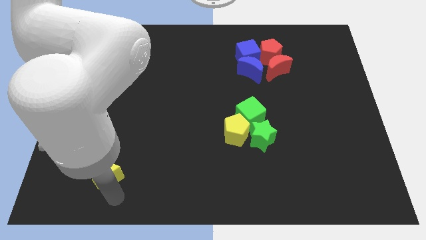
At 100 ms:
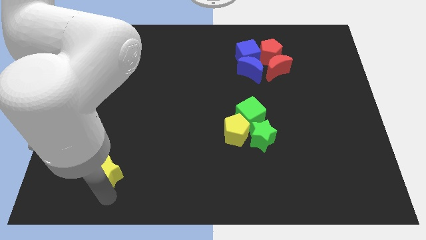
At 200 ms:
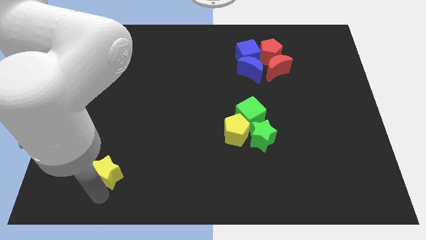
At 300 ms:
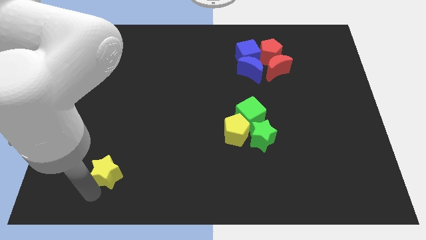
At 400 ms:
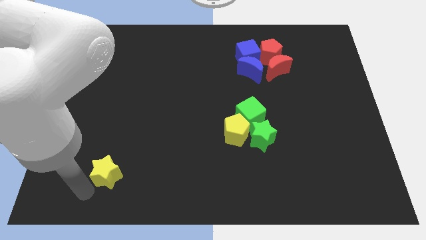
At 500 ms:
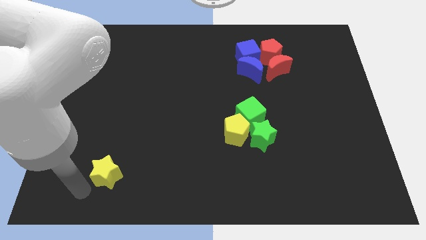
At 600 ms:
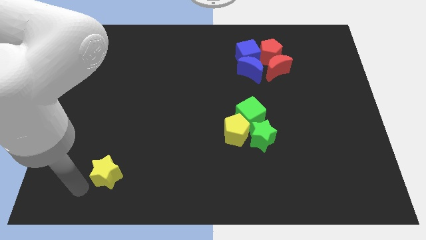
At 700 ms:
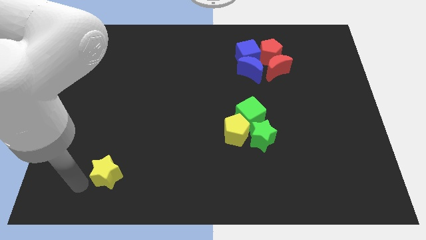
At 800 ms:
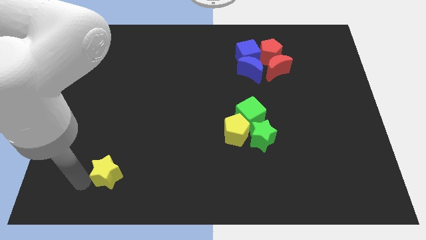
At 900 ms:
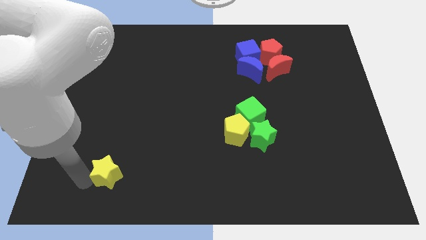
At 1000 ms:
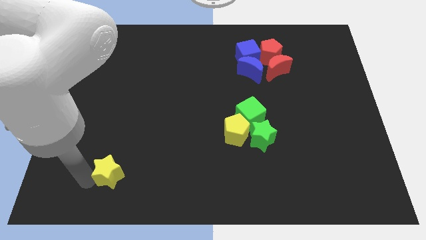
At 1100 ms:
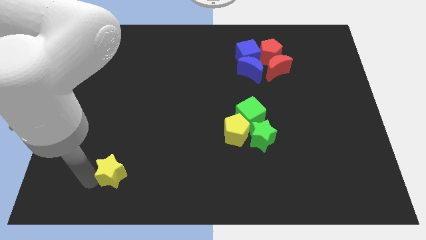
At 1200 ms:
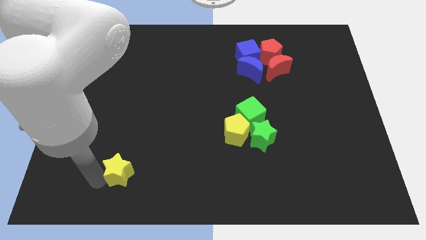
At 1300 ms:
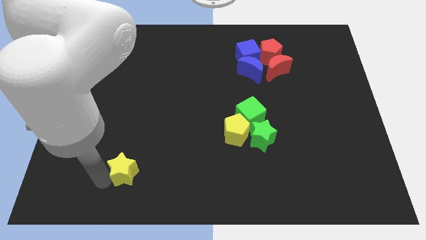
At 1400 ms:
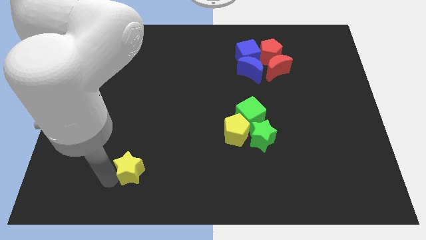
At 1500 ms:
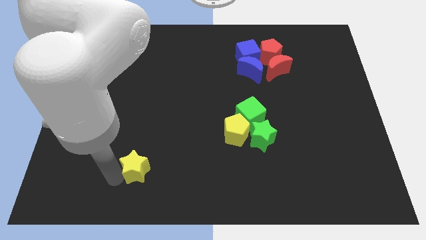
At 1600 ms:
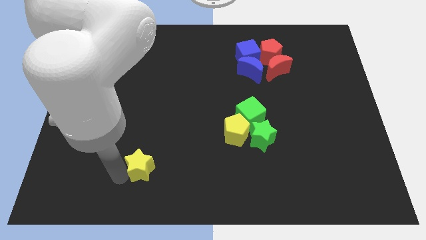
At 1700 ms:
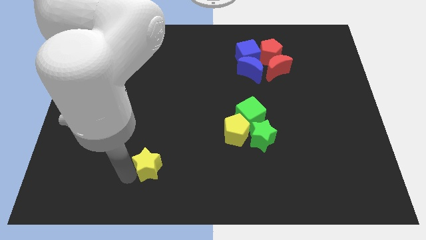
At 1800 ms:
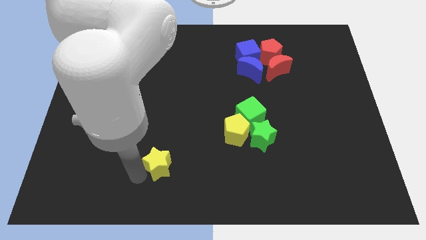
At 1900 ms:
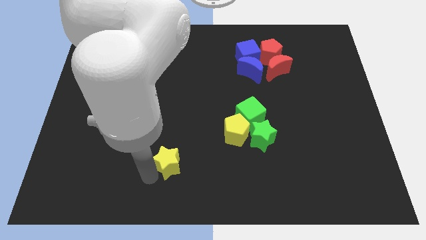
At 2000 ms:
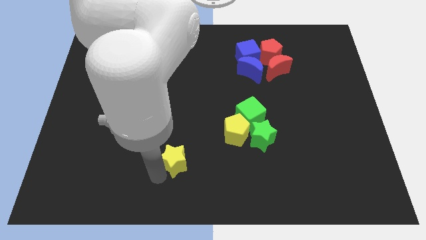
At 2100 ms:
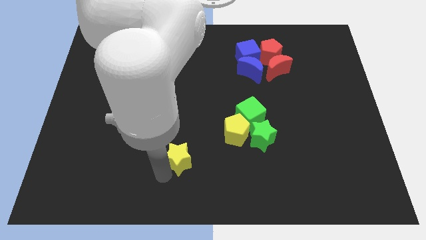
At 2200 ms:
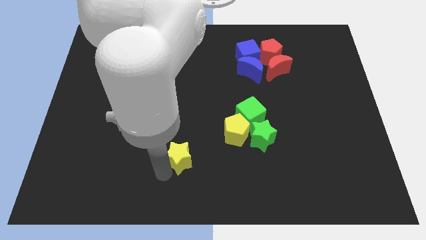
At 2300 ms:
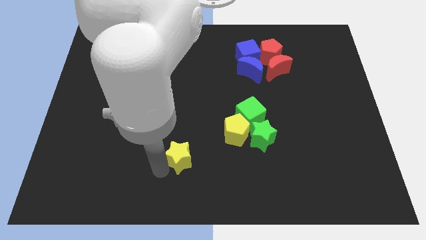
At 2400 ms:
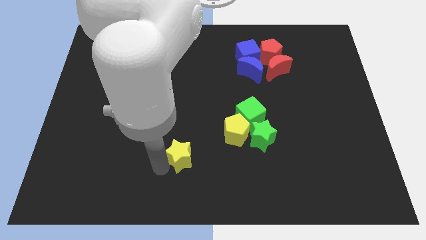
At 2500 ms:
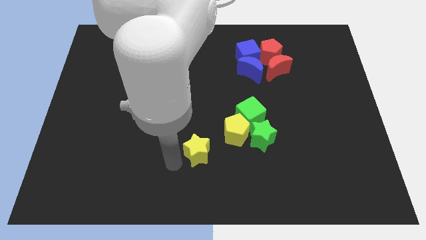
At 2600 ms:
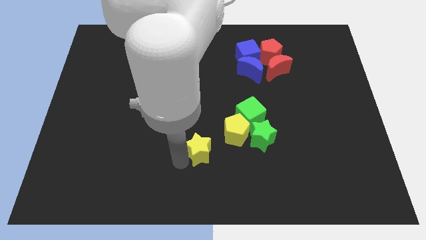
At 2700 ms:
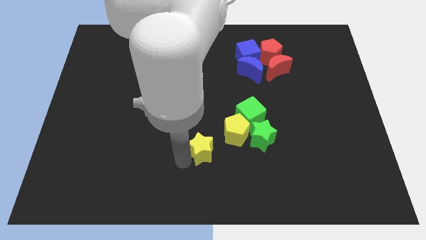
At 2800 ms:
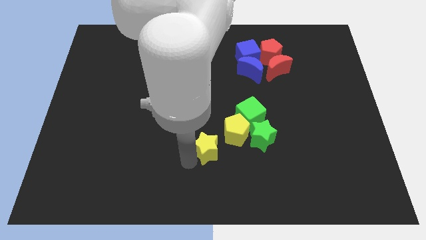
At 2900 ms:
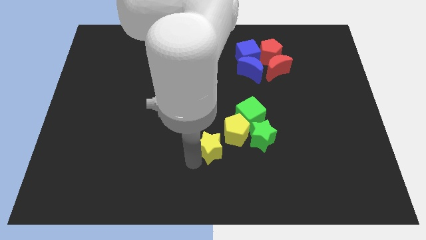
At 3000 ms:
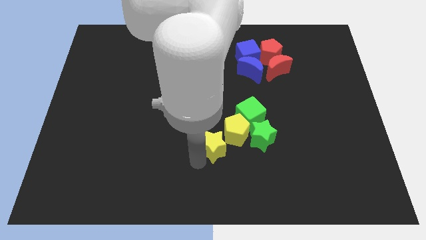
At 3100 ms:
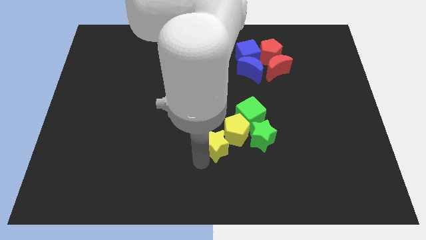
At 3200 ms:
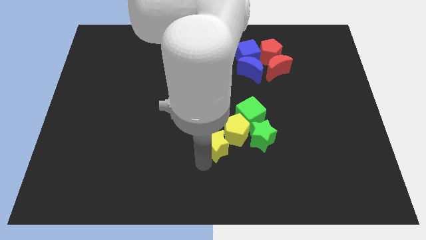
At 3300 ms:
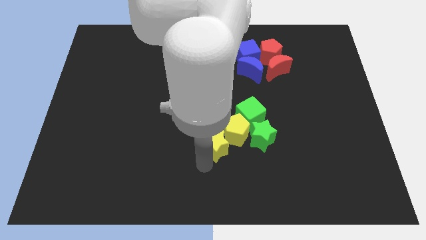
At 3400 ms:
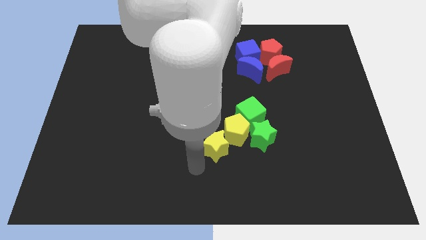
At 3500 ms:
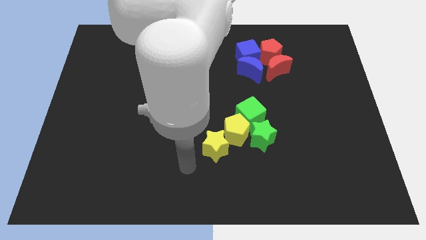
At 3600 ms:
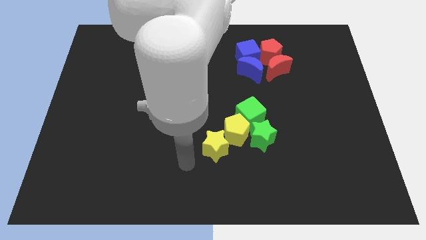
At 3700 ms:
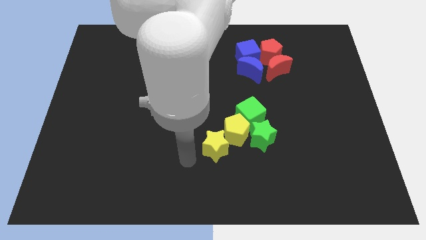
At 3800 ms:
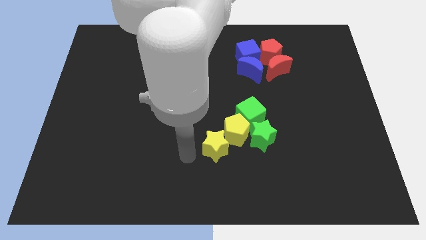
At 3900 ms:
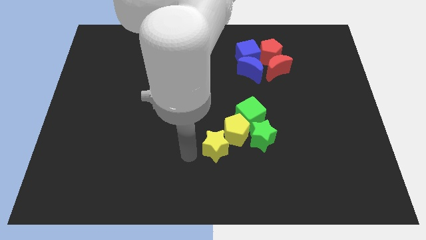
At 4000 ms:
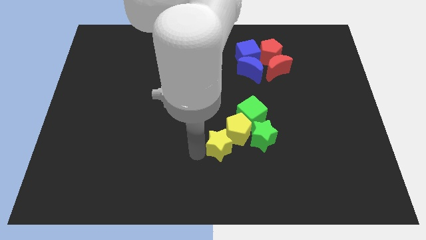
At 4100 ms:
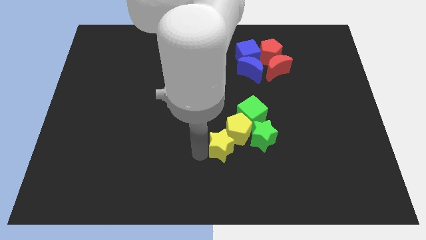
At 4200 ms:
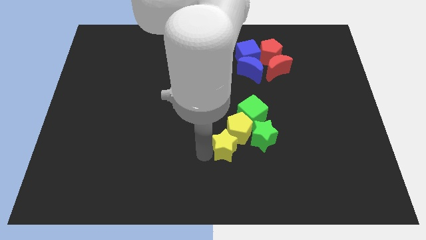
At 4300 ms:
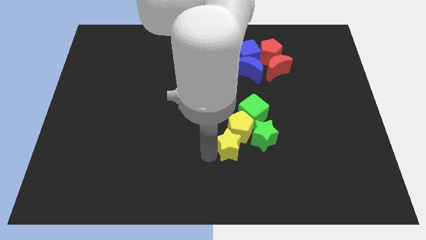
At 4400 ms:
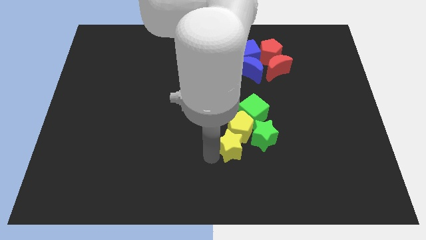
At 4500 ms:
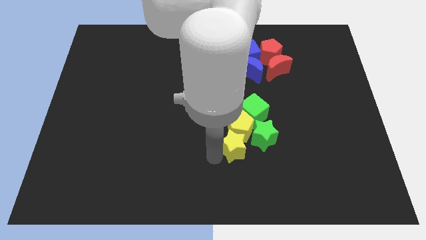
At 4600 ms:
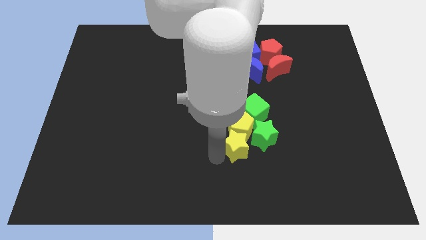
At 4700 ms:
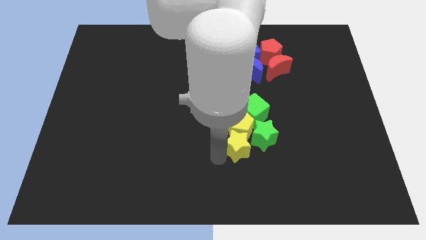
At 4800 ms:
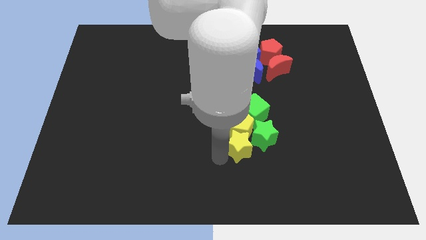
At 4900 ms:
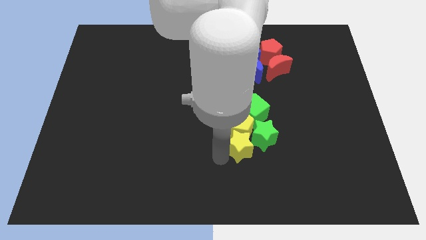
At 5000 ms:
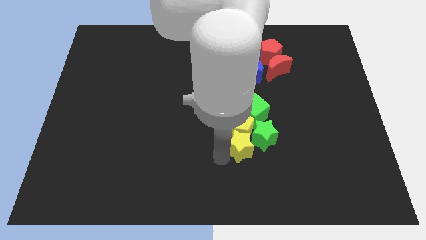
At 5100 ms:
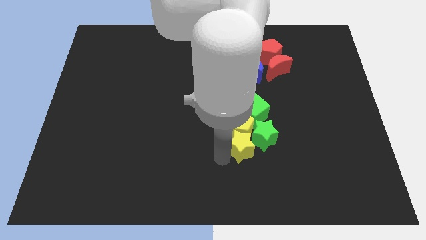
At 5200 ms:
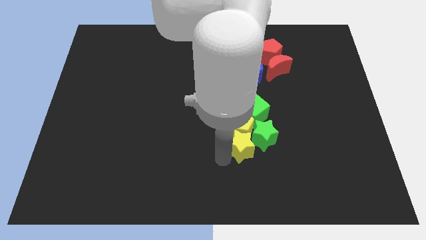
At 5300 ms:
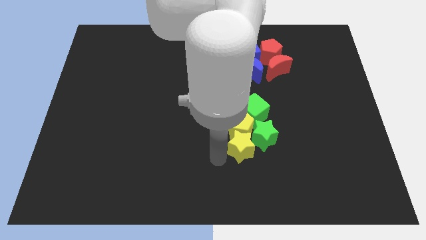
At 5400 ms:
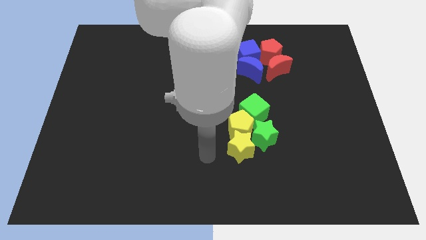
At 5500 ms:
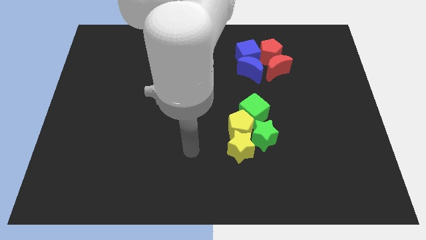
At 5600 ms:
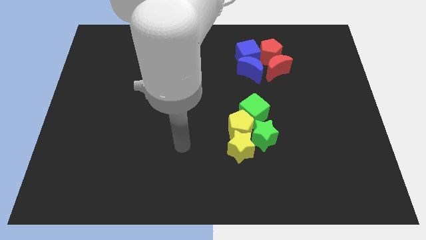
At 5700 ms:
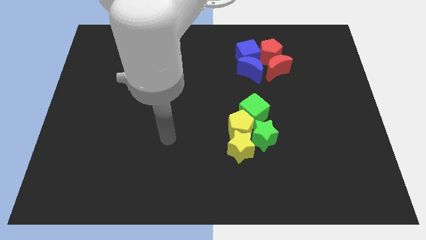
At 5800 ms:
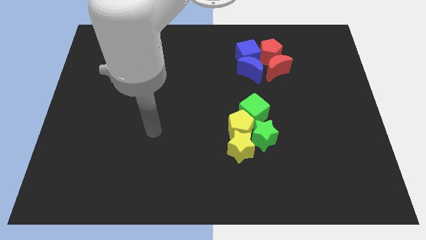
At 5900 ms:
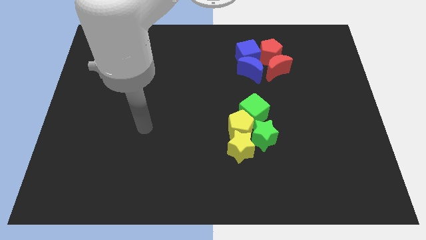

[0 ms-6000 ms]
push the yellow star to the bottom of the yellow pentagon

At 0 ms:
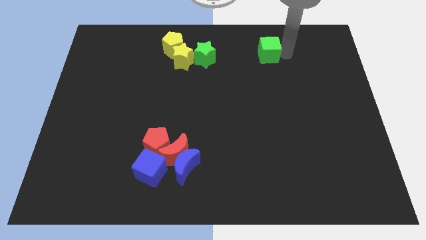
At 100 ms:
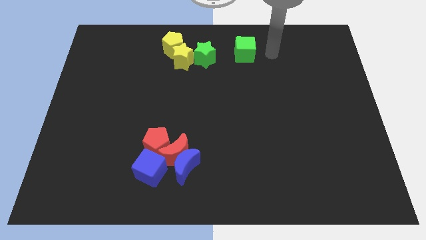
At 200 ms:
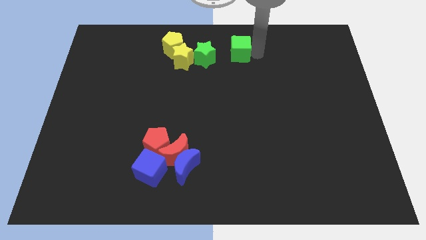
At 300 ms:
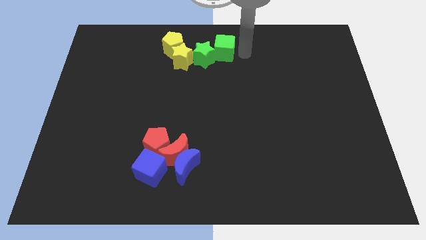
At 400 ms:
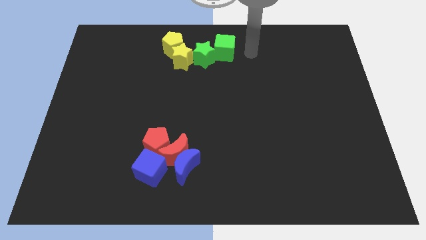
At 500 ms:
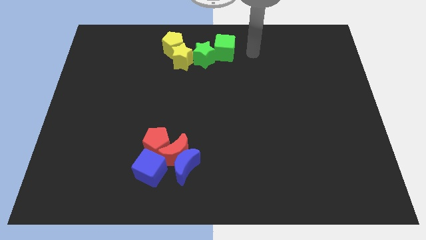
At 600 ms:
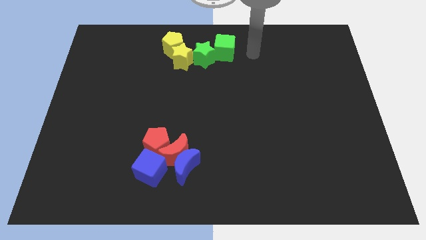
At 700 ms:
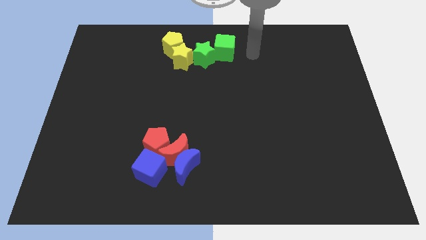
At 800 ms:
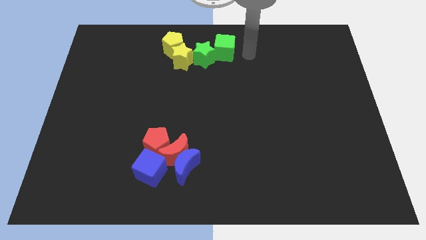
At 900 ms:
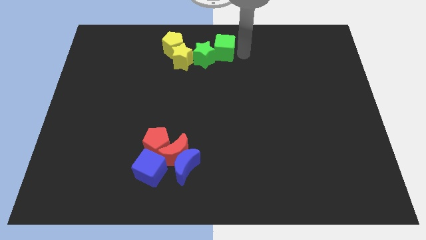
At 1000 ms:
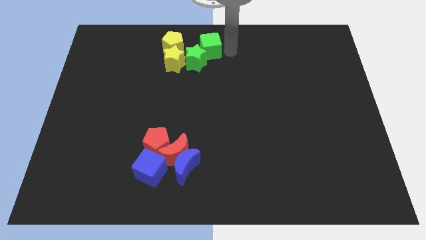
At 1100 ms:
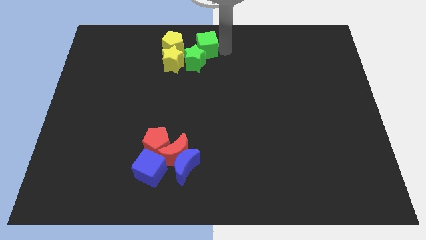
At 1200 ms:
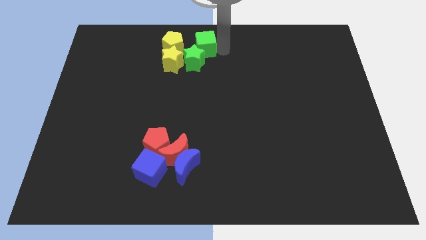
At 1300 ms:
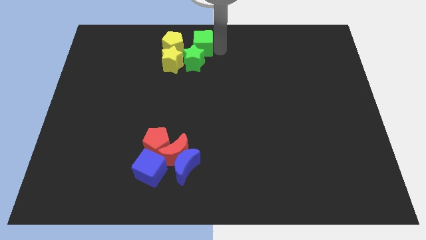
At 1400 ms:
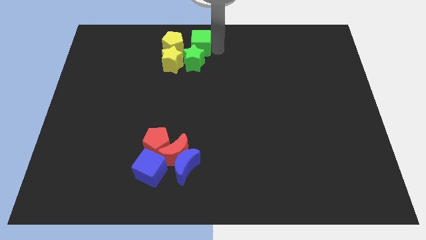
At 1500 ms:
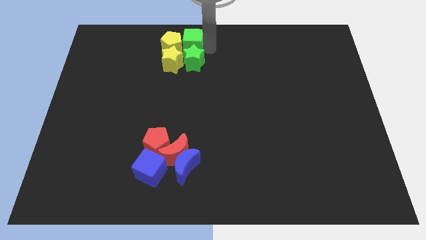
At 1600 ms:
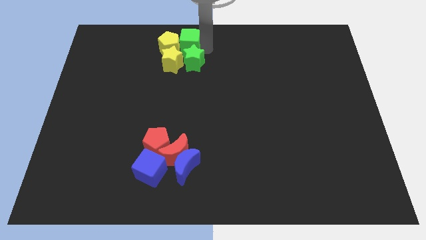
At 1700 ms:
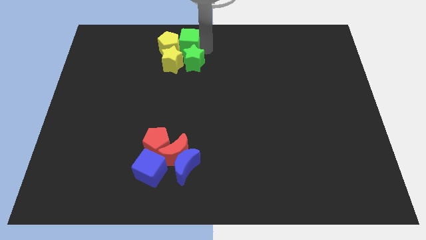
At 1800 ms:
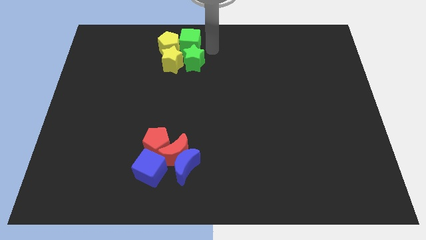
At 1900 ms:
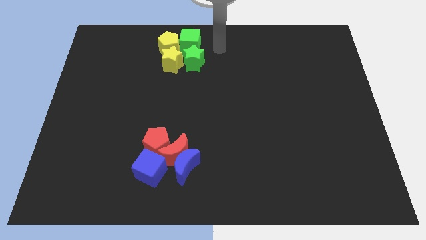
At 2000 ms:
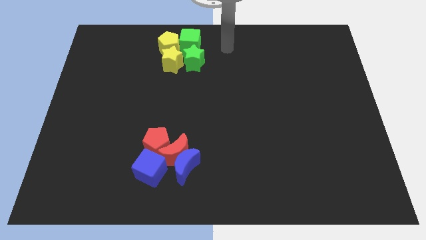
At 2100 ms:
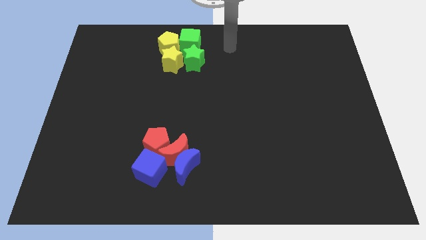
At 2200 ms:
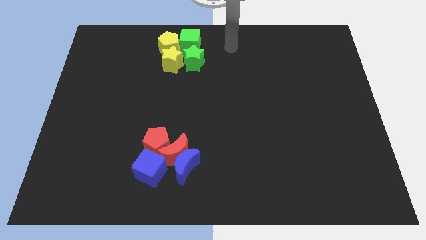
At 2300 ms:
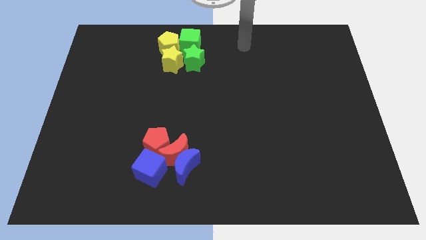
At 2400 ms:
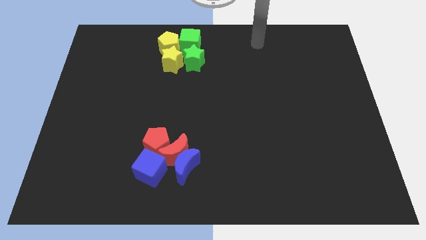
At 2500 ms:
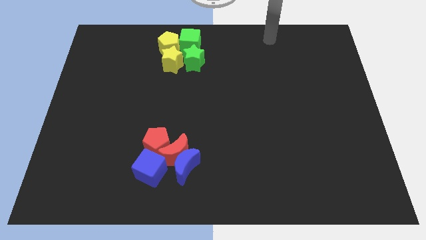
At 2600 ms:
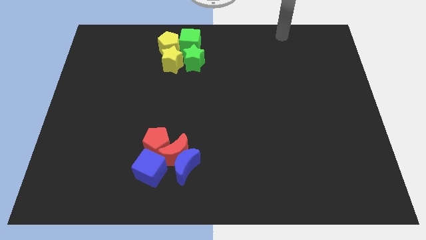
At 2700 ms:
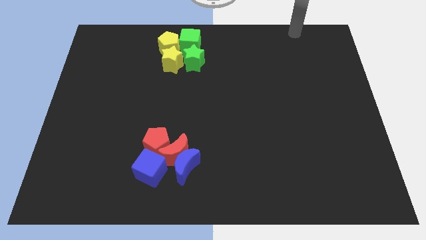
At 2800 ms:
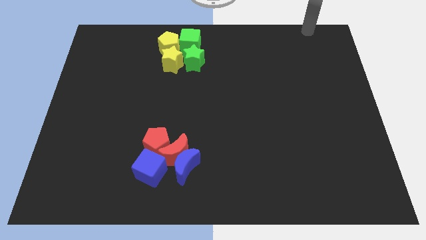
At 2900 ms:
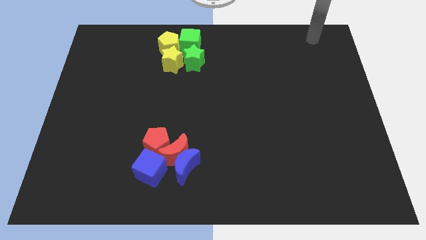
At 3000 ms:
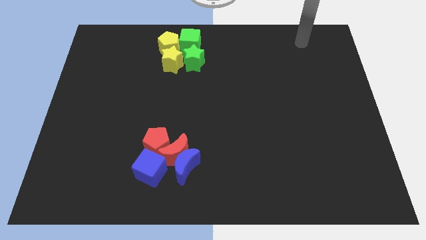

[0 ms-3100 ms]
move the arm to the top right of the board
